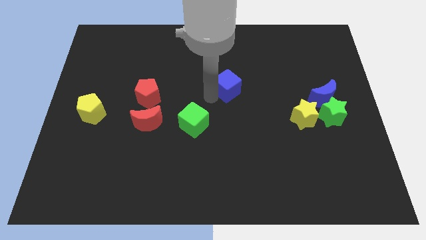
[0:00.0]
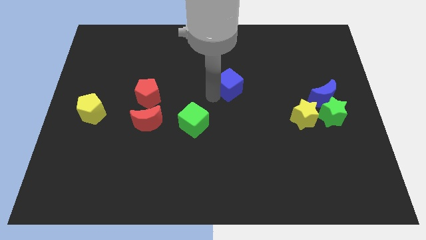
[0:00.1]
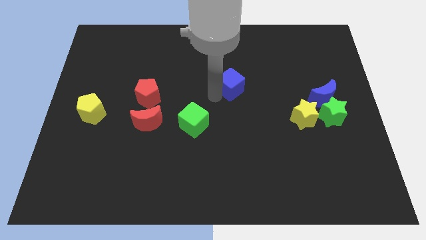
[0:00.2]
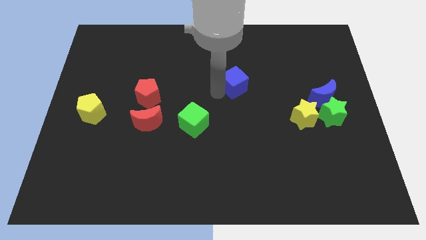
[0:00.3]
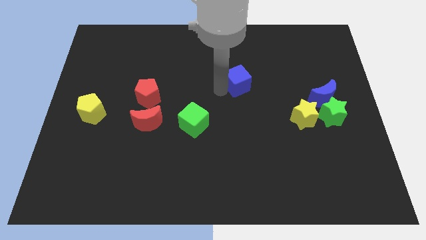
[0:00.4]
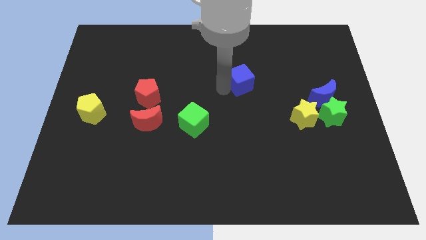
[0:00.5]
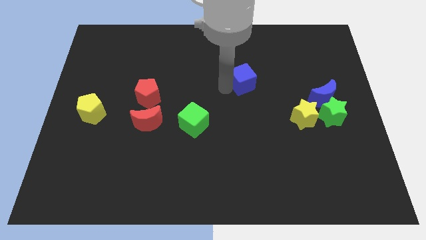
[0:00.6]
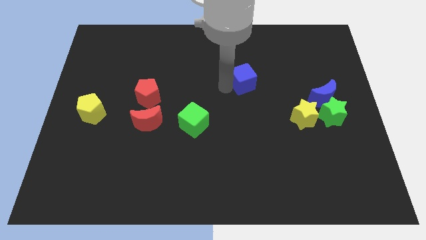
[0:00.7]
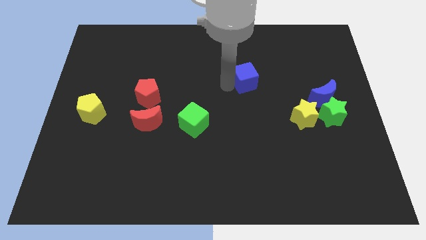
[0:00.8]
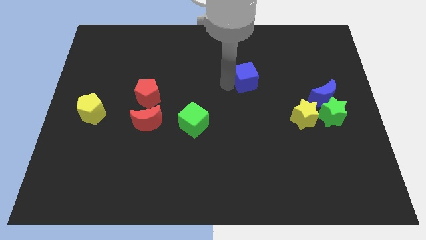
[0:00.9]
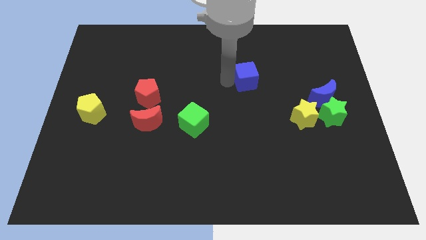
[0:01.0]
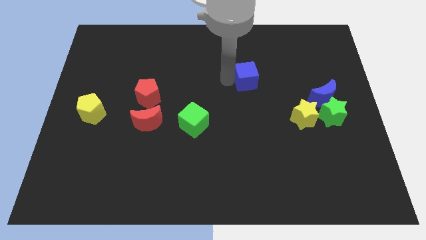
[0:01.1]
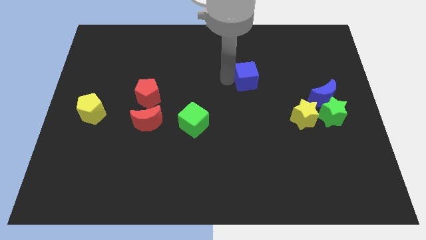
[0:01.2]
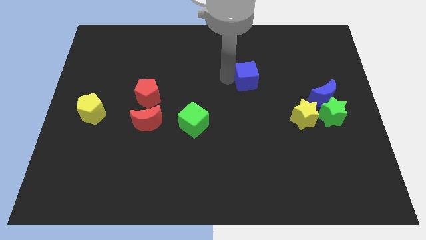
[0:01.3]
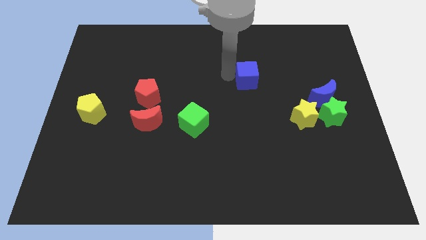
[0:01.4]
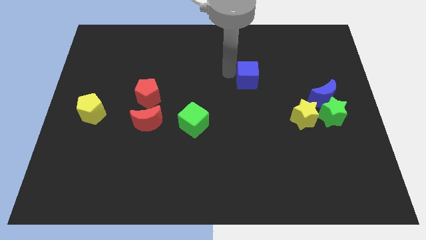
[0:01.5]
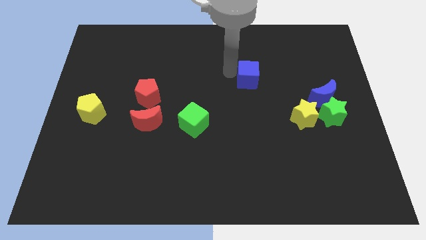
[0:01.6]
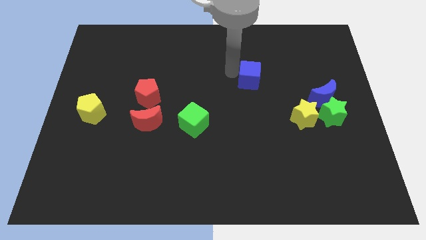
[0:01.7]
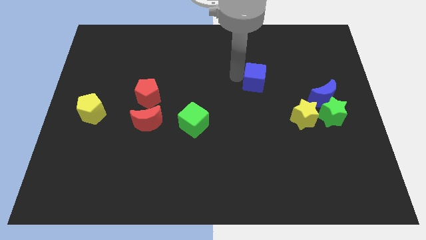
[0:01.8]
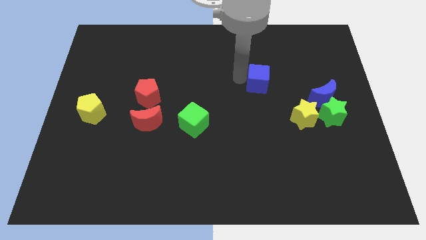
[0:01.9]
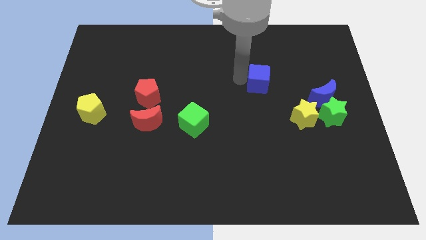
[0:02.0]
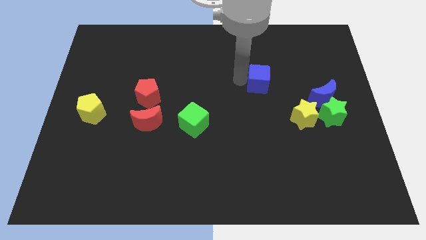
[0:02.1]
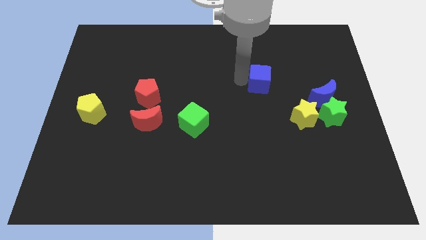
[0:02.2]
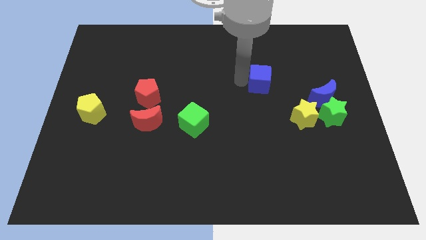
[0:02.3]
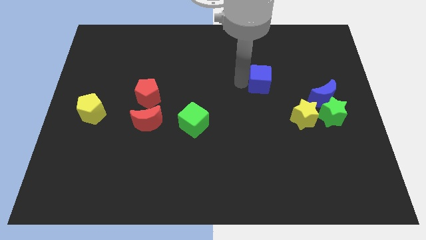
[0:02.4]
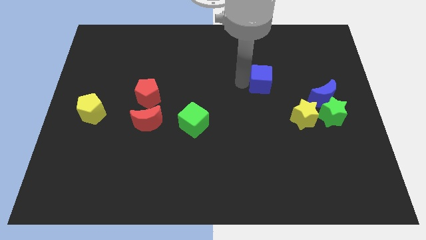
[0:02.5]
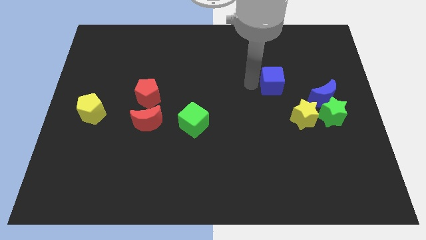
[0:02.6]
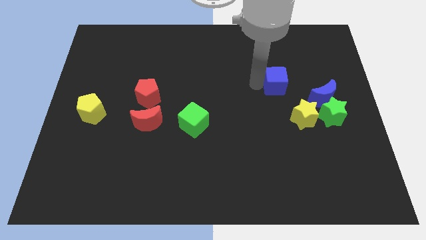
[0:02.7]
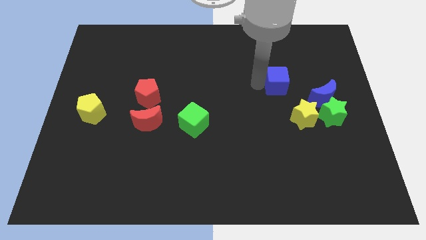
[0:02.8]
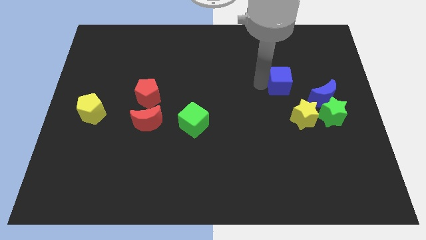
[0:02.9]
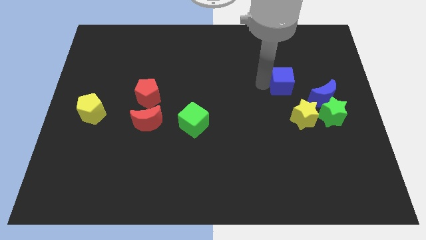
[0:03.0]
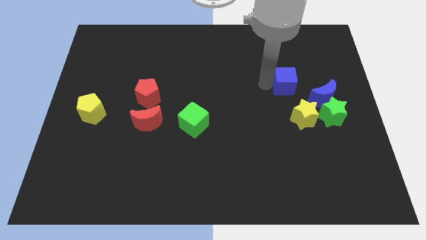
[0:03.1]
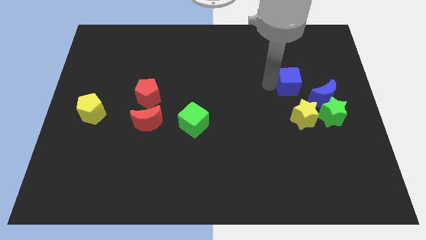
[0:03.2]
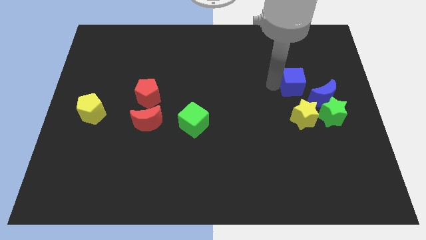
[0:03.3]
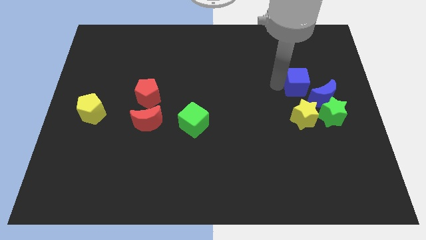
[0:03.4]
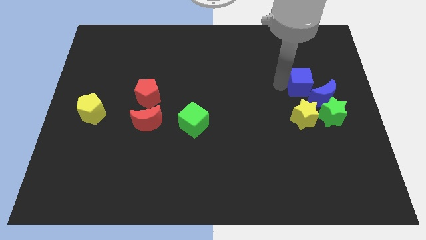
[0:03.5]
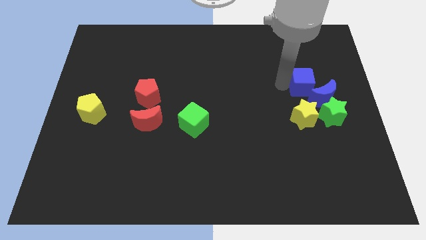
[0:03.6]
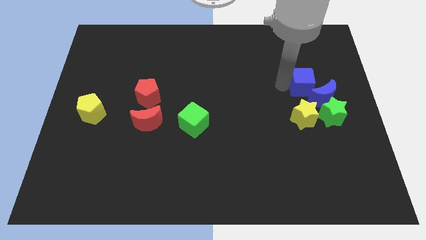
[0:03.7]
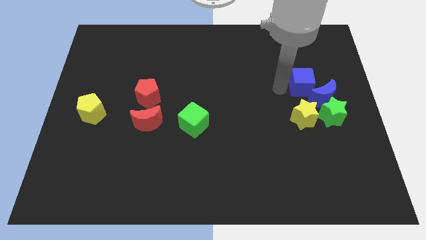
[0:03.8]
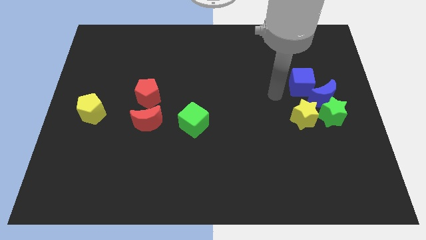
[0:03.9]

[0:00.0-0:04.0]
move the blue cube close to the top side of the blue crescent

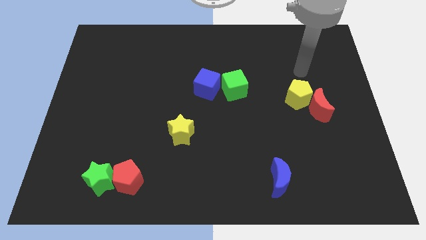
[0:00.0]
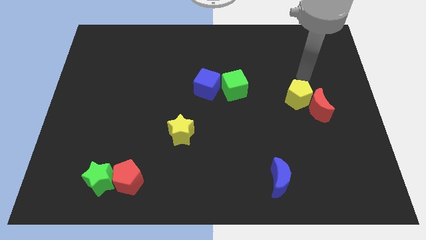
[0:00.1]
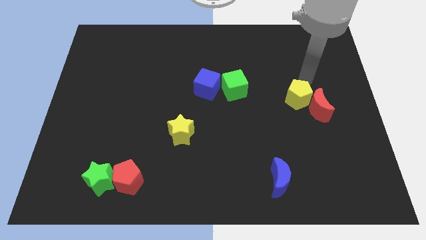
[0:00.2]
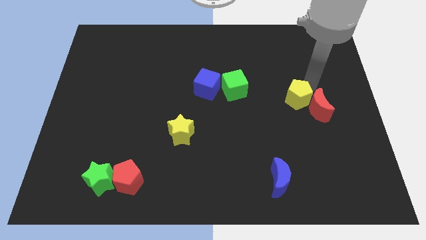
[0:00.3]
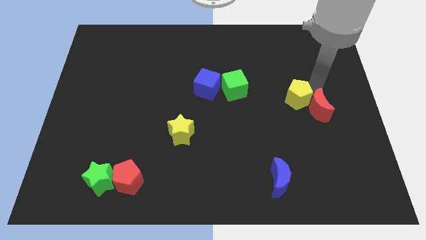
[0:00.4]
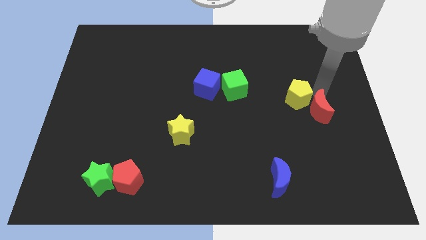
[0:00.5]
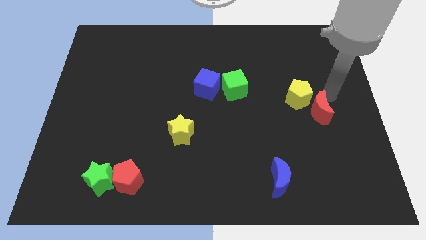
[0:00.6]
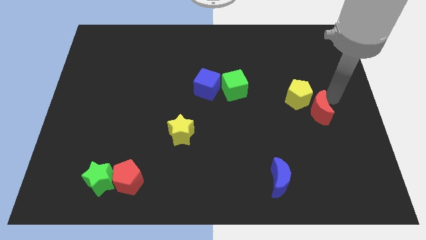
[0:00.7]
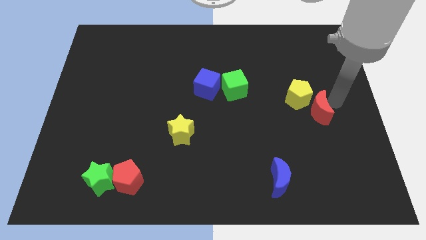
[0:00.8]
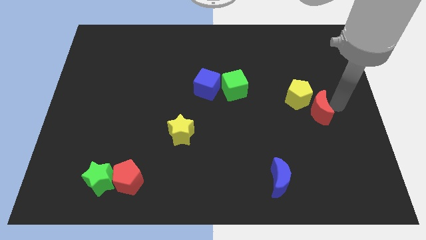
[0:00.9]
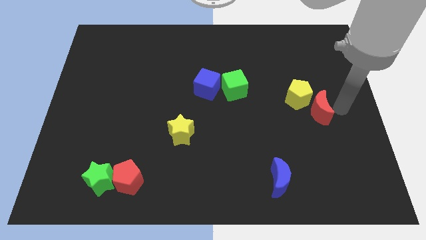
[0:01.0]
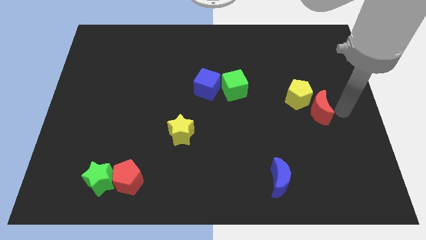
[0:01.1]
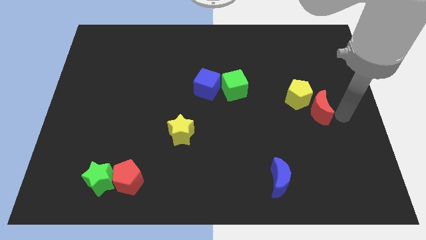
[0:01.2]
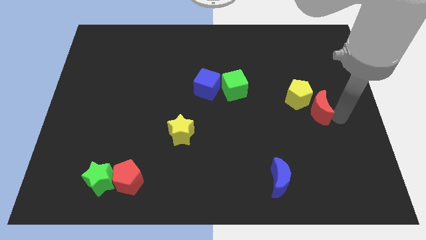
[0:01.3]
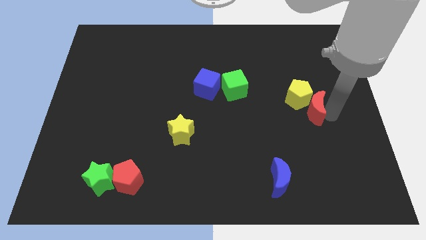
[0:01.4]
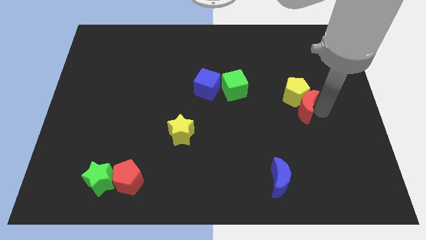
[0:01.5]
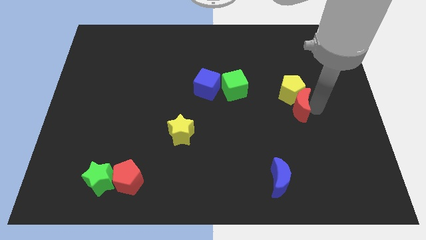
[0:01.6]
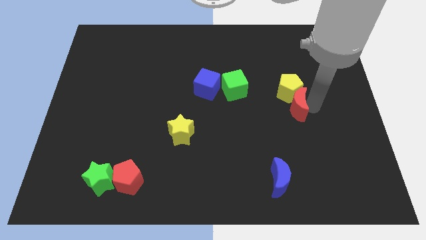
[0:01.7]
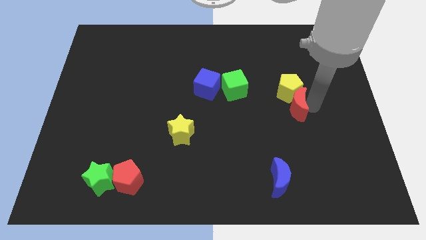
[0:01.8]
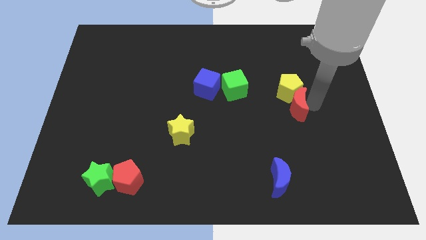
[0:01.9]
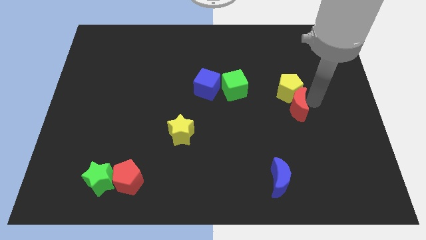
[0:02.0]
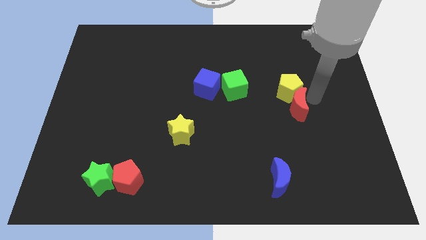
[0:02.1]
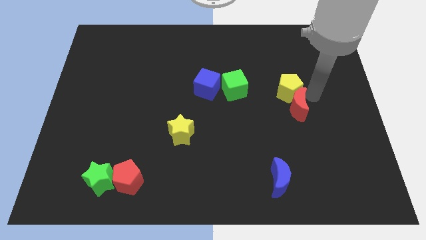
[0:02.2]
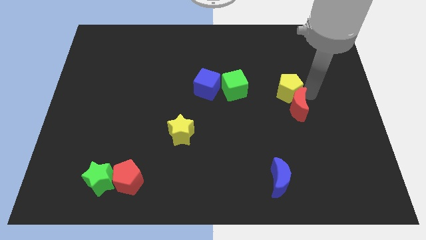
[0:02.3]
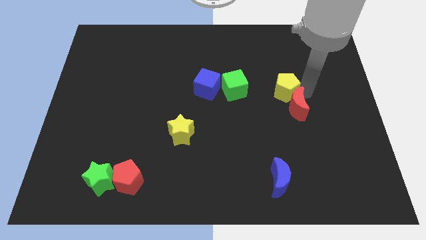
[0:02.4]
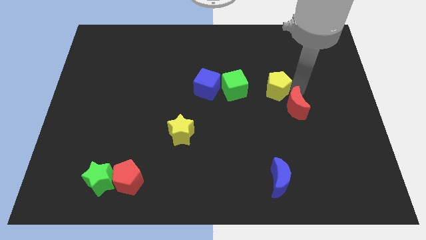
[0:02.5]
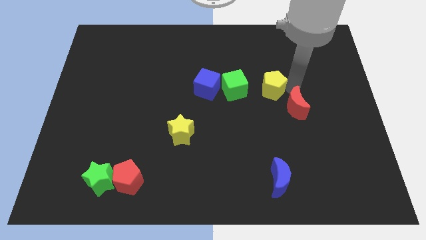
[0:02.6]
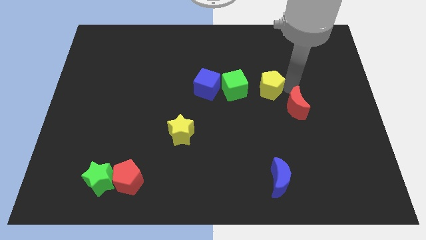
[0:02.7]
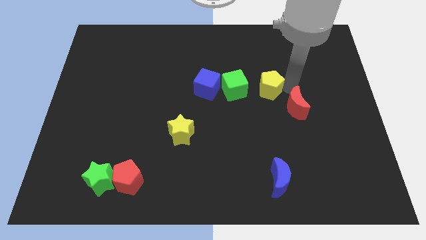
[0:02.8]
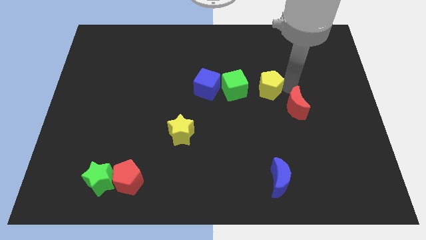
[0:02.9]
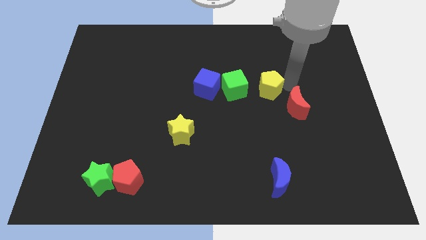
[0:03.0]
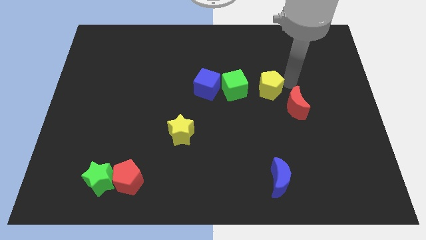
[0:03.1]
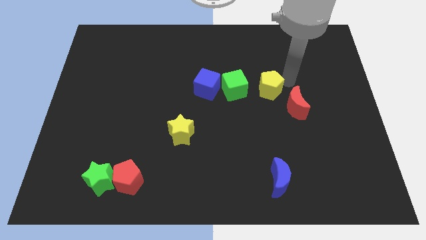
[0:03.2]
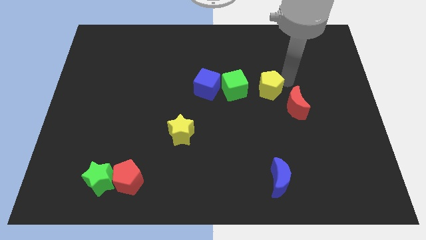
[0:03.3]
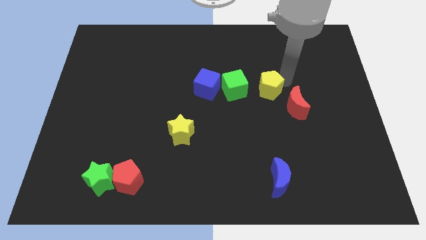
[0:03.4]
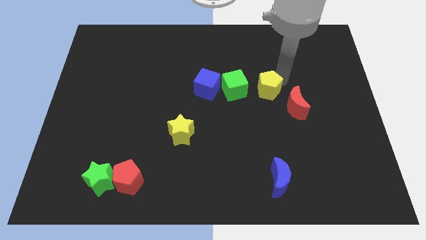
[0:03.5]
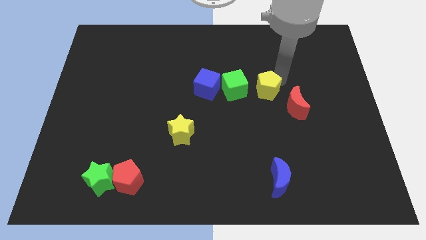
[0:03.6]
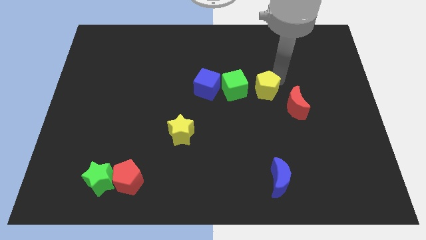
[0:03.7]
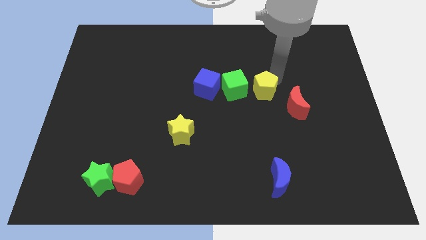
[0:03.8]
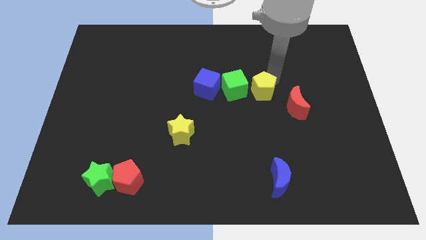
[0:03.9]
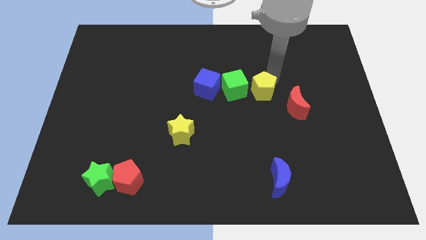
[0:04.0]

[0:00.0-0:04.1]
push the yellow pentagon with the red moon

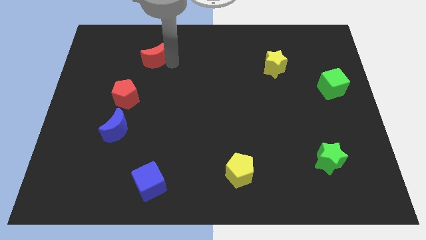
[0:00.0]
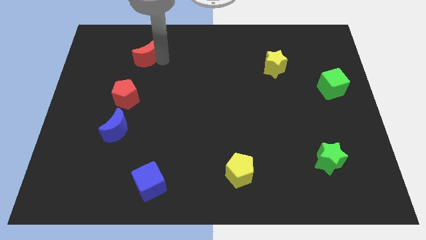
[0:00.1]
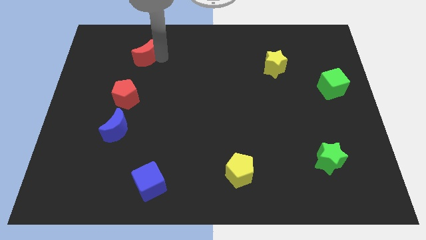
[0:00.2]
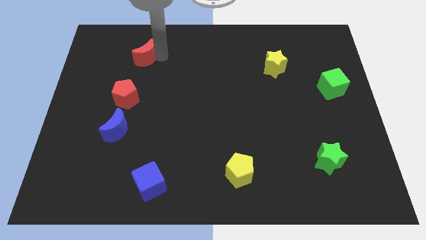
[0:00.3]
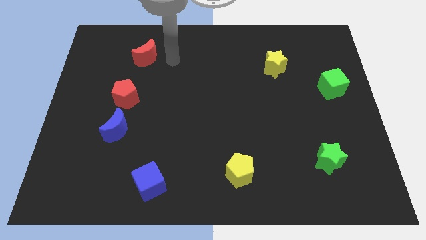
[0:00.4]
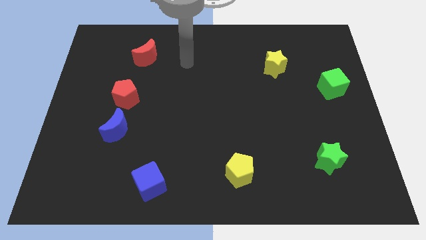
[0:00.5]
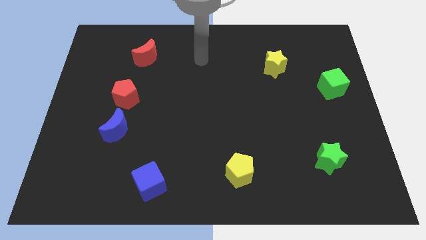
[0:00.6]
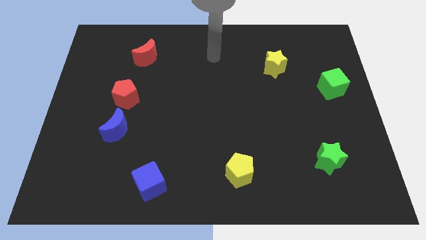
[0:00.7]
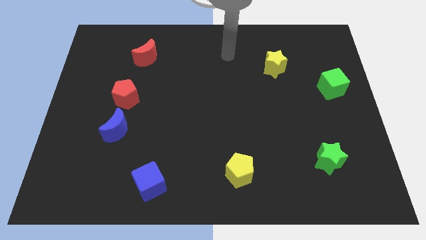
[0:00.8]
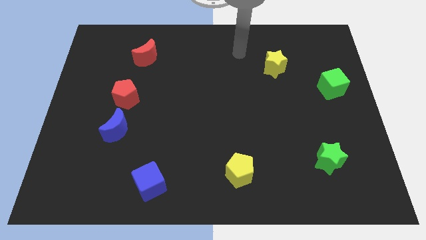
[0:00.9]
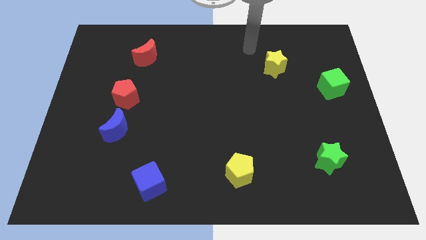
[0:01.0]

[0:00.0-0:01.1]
move the red moon towards the top left of the board
